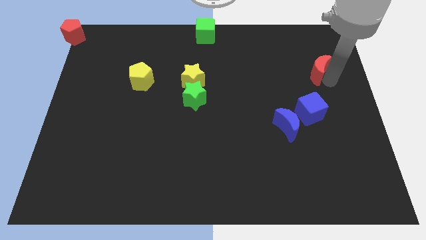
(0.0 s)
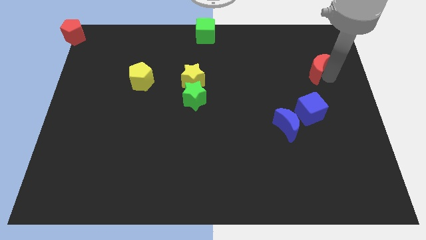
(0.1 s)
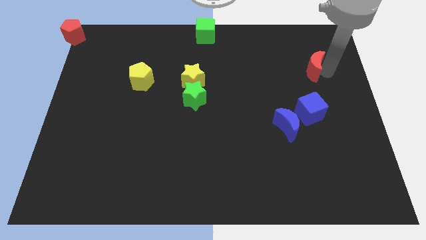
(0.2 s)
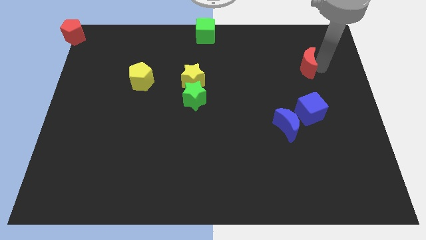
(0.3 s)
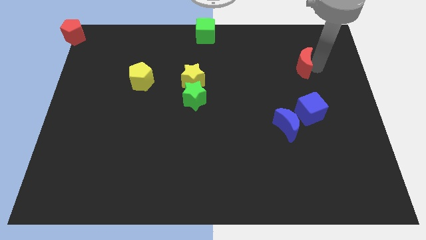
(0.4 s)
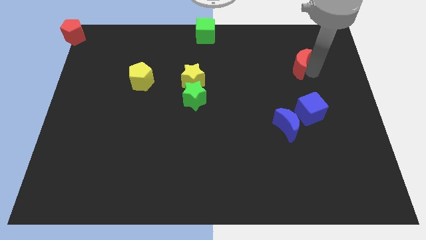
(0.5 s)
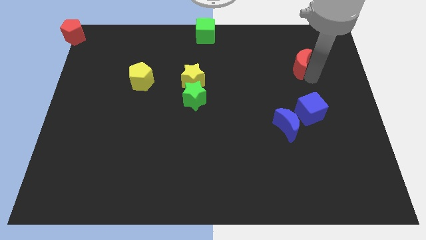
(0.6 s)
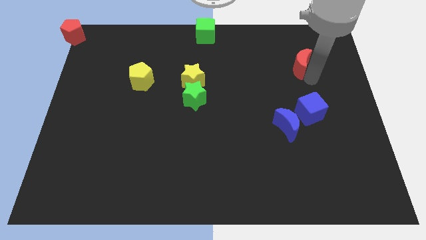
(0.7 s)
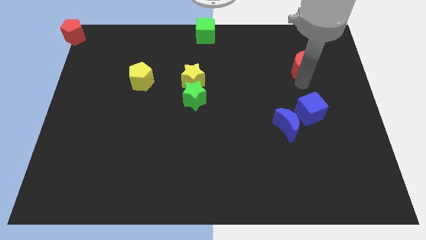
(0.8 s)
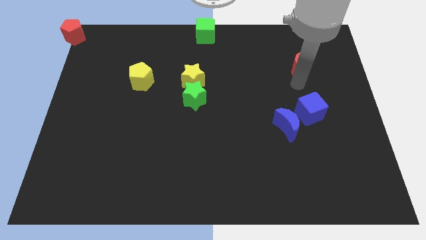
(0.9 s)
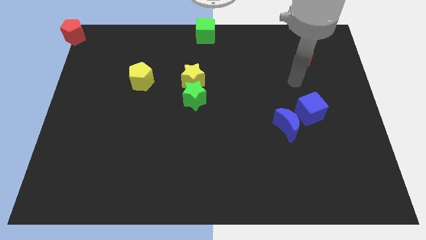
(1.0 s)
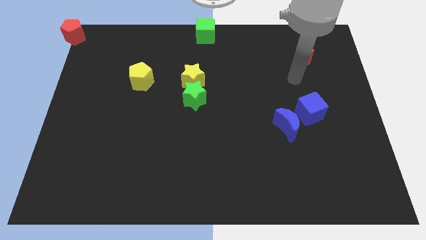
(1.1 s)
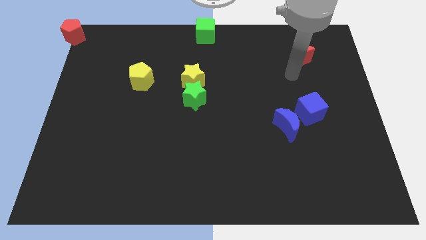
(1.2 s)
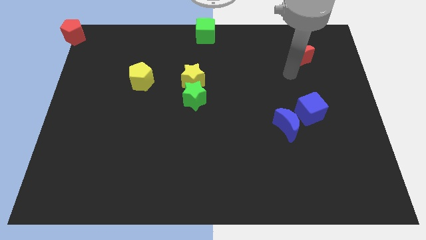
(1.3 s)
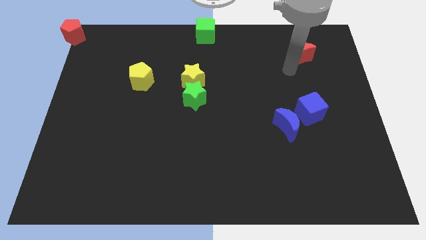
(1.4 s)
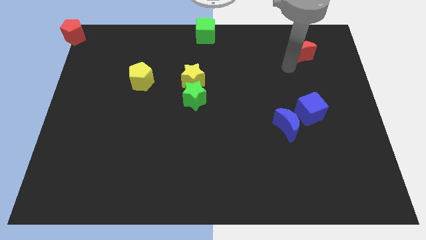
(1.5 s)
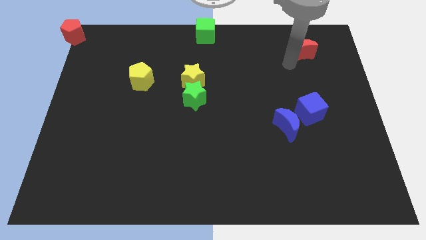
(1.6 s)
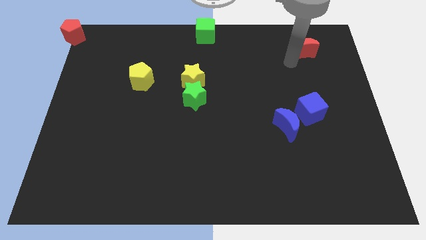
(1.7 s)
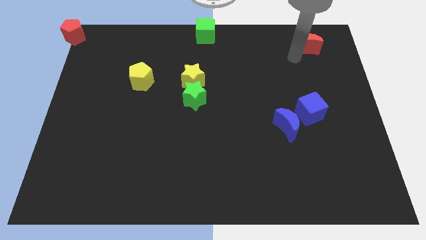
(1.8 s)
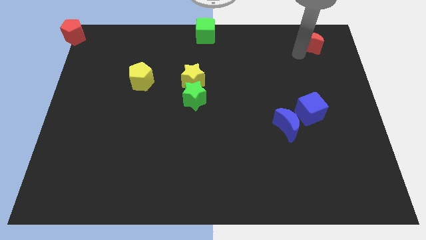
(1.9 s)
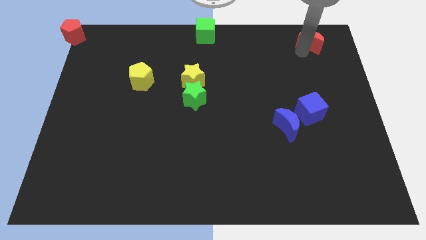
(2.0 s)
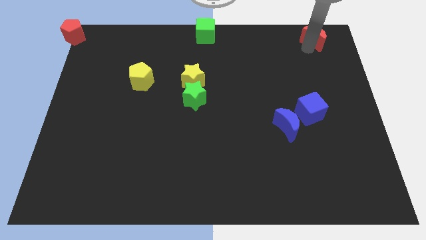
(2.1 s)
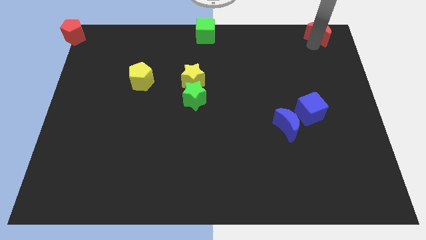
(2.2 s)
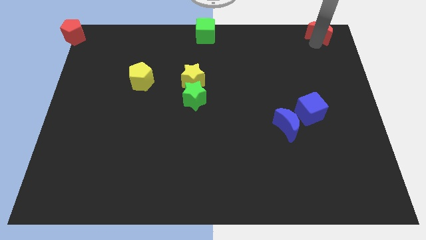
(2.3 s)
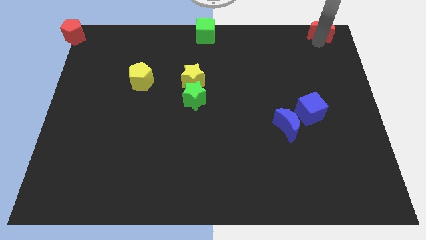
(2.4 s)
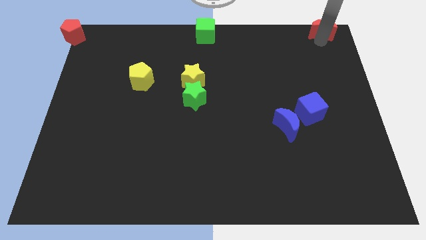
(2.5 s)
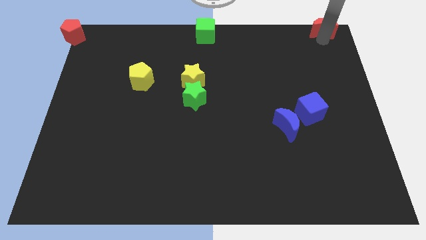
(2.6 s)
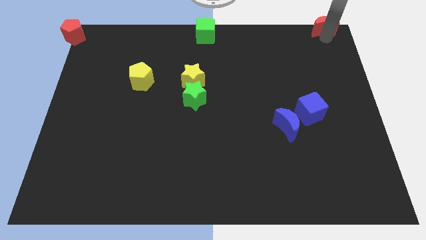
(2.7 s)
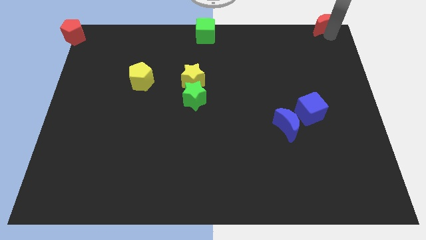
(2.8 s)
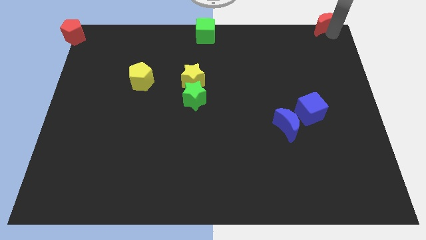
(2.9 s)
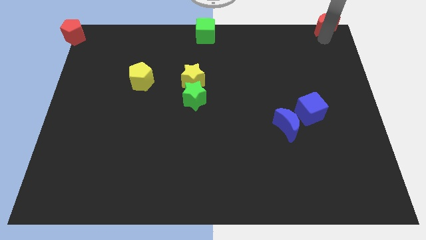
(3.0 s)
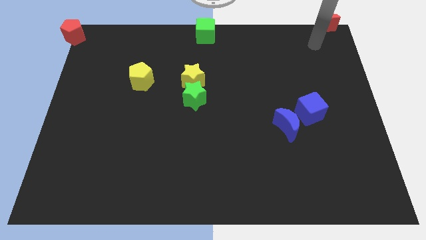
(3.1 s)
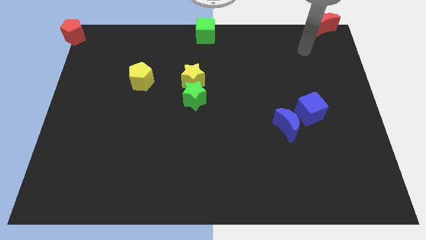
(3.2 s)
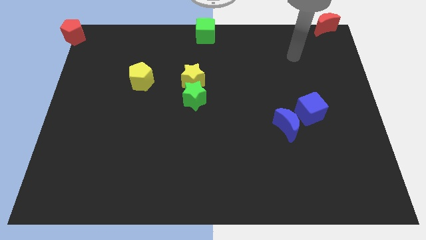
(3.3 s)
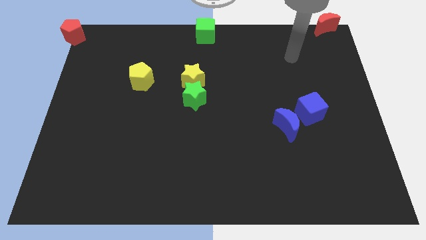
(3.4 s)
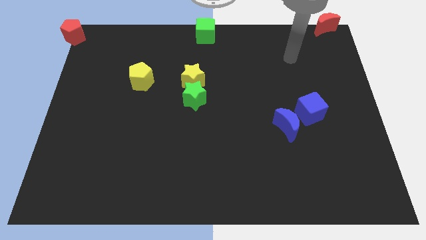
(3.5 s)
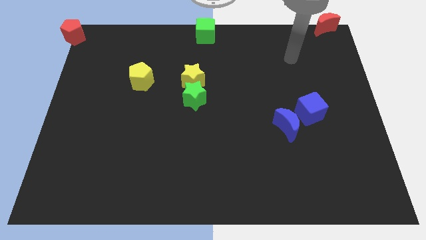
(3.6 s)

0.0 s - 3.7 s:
place the red crescent at the top right corner of the board

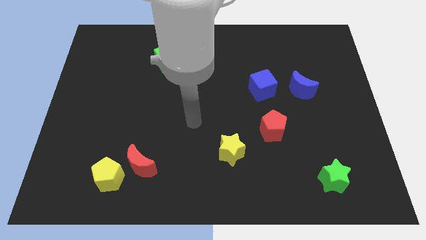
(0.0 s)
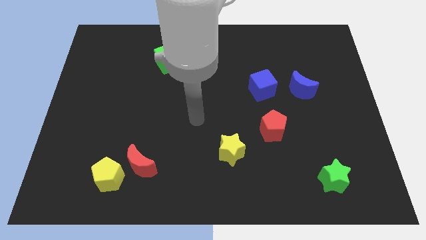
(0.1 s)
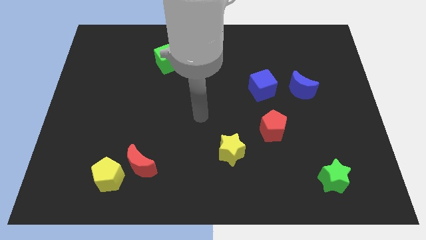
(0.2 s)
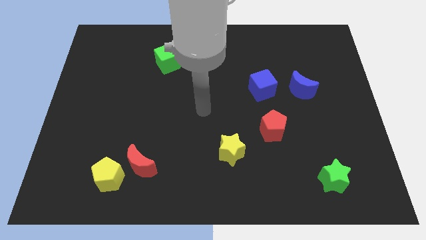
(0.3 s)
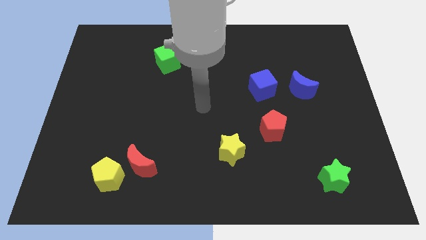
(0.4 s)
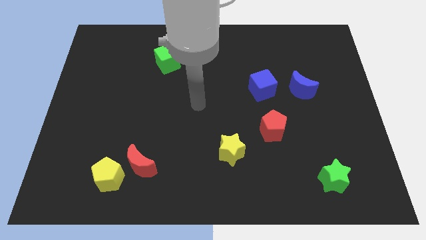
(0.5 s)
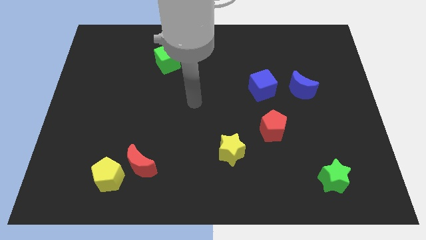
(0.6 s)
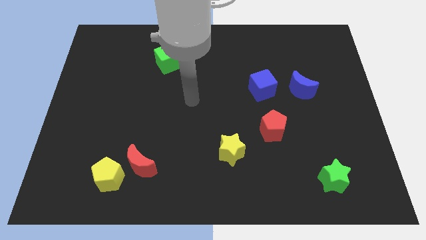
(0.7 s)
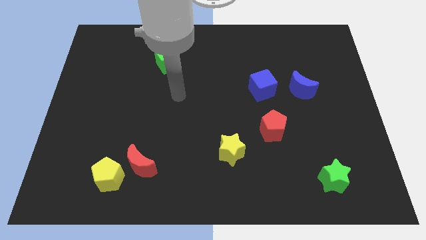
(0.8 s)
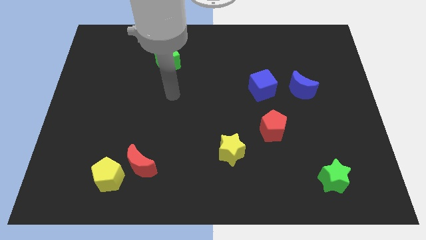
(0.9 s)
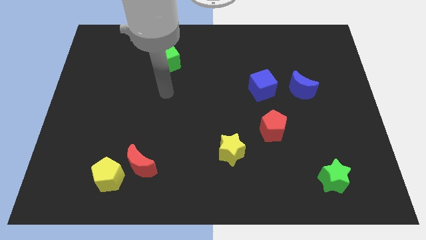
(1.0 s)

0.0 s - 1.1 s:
move your arm below the green cube

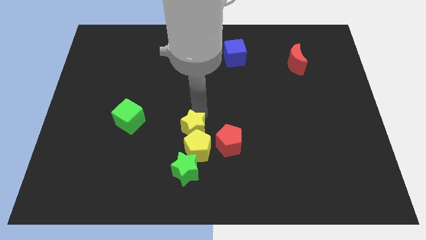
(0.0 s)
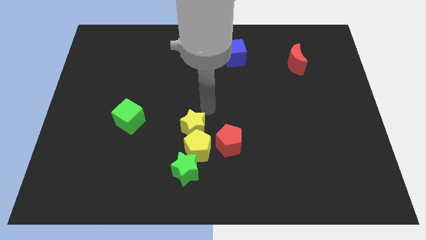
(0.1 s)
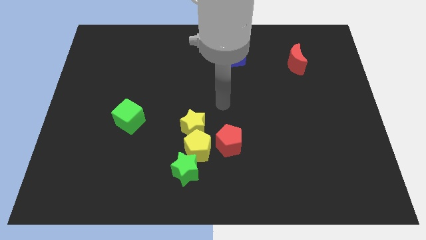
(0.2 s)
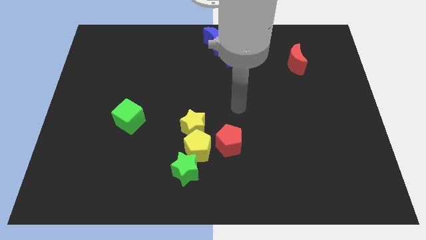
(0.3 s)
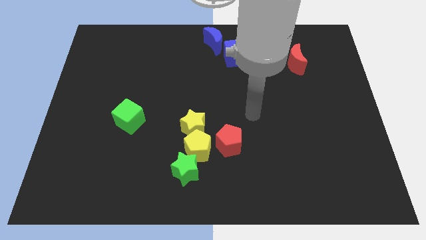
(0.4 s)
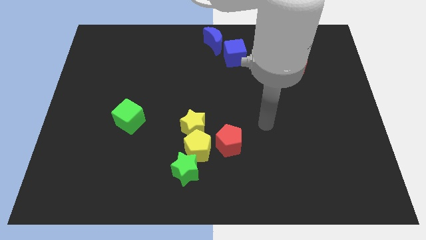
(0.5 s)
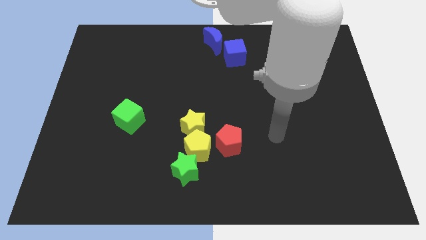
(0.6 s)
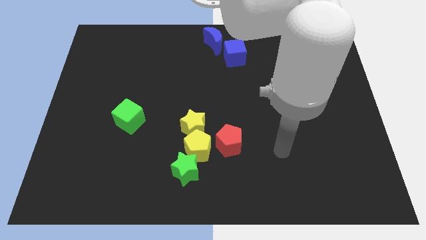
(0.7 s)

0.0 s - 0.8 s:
point the arm to the right of the red pentagon

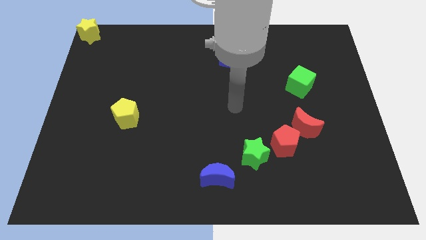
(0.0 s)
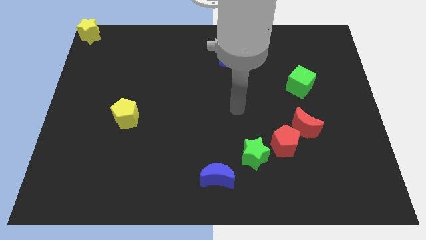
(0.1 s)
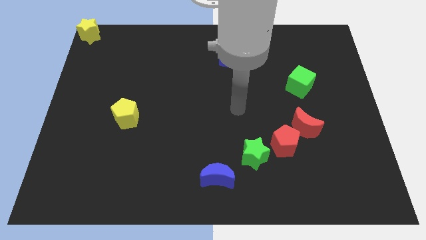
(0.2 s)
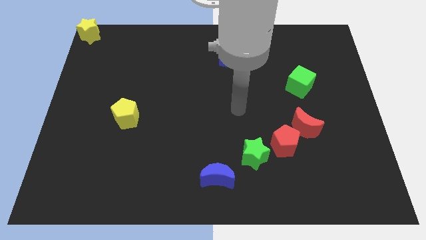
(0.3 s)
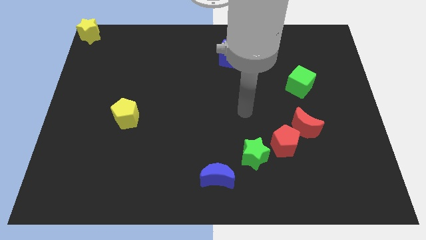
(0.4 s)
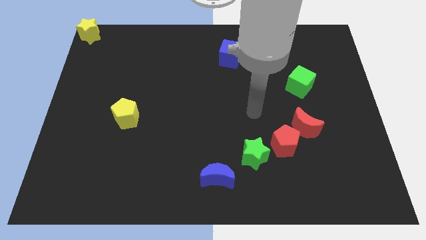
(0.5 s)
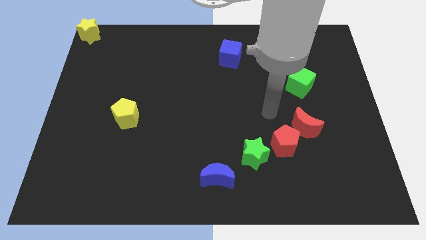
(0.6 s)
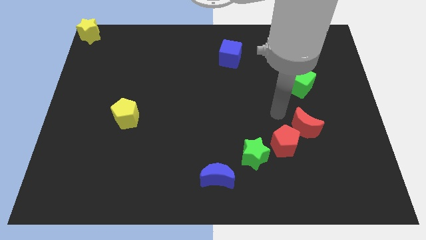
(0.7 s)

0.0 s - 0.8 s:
place your arm at the top left side of the board

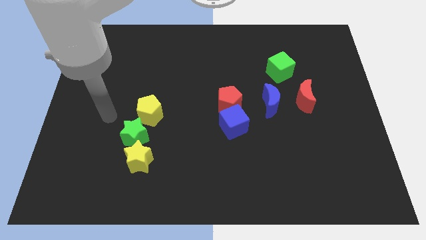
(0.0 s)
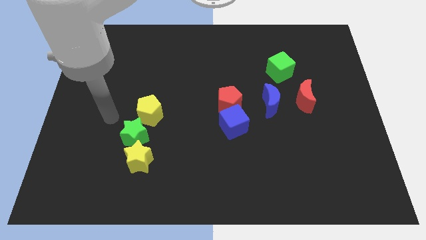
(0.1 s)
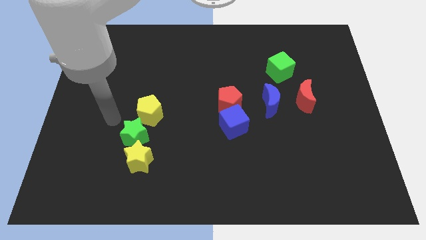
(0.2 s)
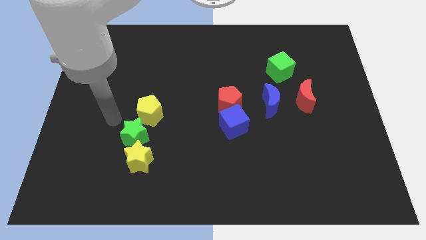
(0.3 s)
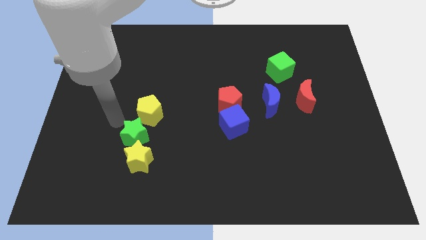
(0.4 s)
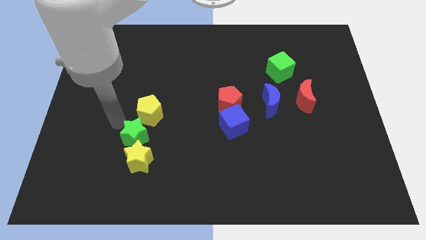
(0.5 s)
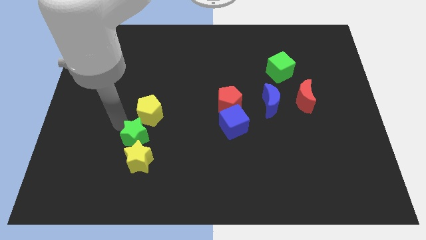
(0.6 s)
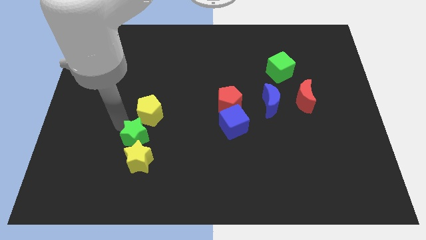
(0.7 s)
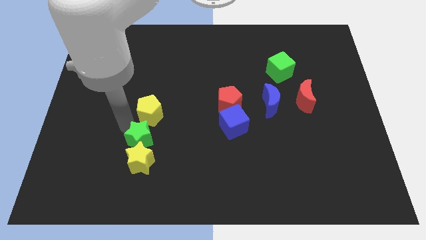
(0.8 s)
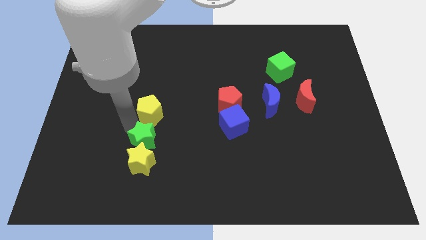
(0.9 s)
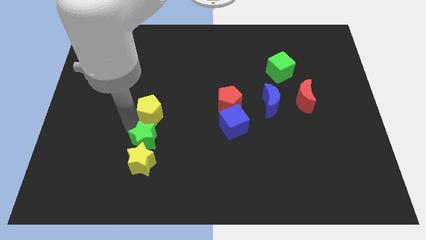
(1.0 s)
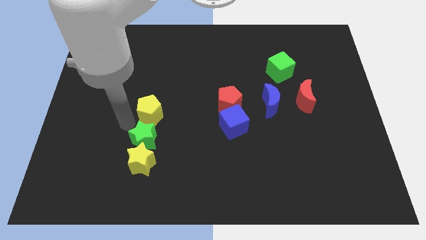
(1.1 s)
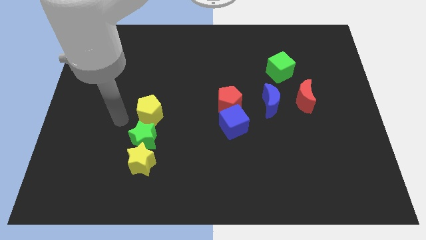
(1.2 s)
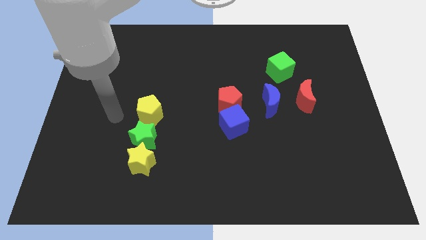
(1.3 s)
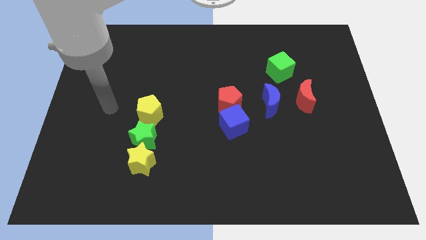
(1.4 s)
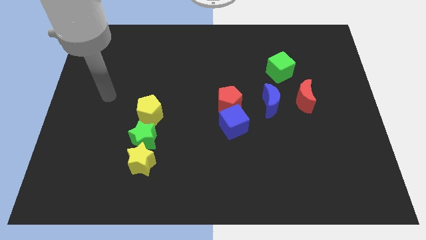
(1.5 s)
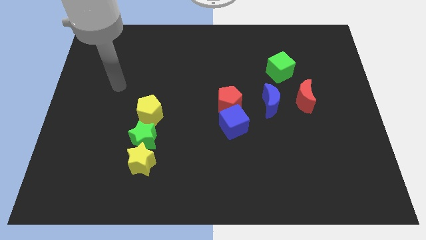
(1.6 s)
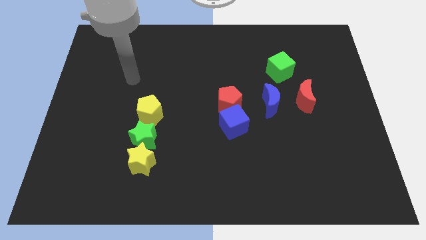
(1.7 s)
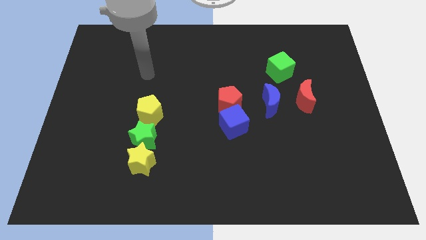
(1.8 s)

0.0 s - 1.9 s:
slide the green star vertically below the yellow pentagon

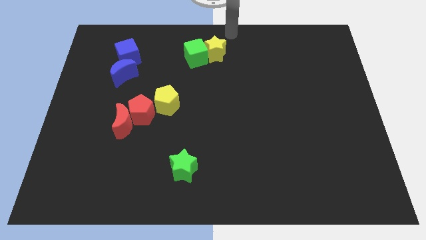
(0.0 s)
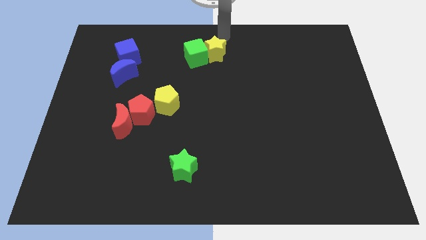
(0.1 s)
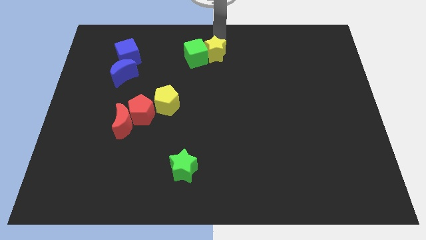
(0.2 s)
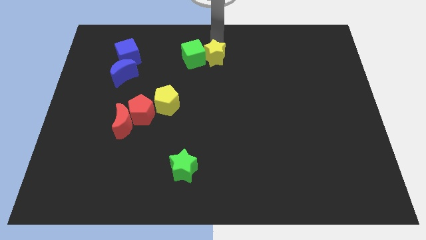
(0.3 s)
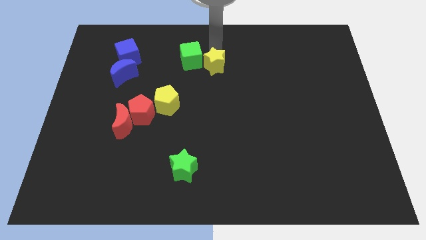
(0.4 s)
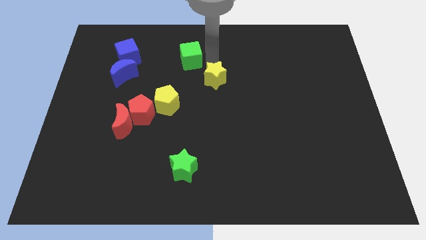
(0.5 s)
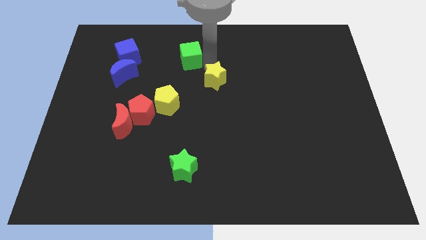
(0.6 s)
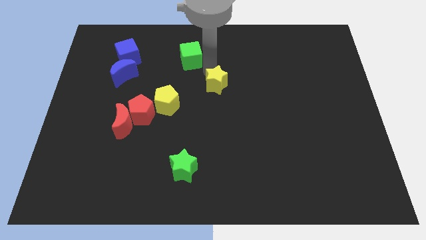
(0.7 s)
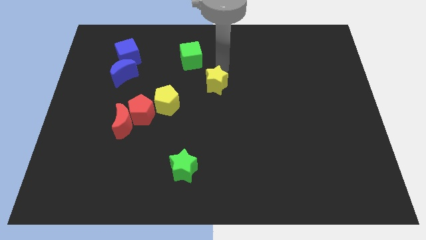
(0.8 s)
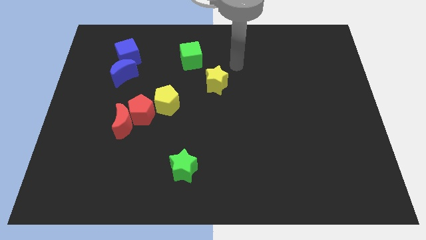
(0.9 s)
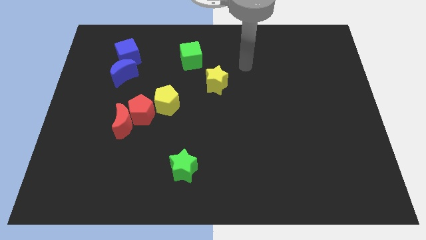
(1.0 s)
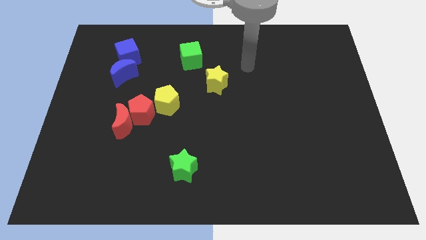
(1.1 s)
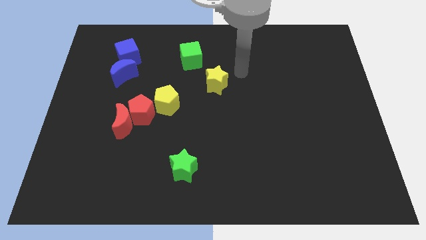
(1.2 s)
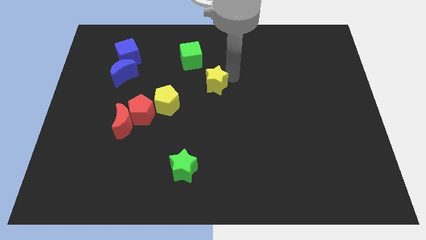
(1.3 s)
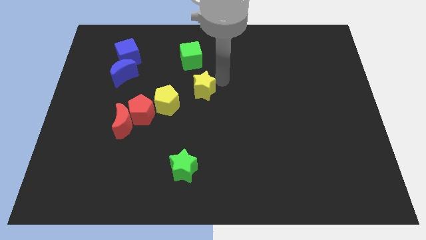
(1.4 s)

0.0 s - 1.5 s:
separate the yellow star from the green cube